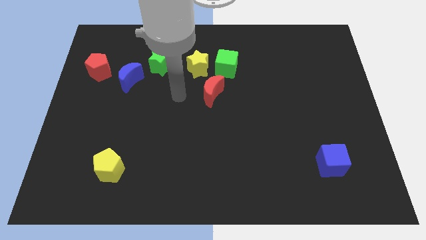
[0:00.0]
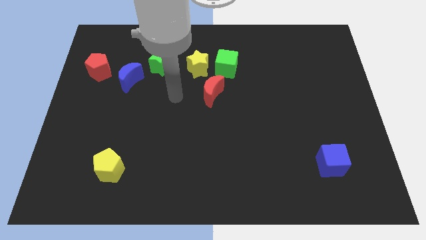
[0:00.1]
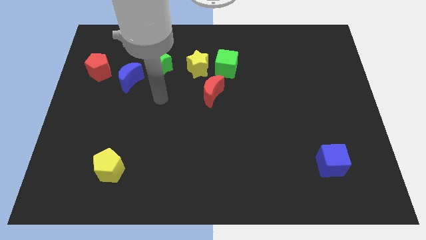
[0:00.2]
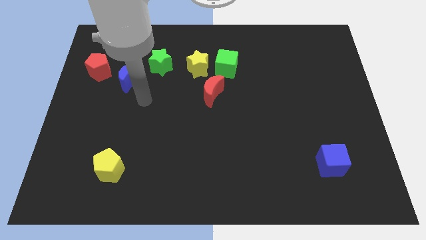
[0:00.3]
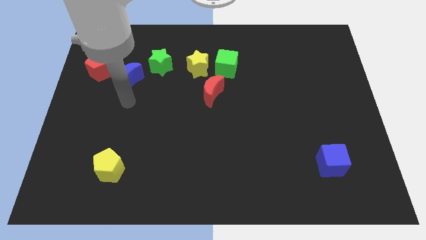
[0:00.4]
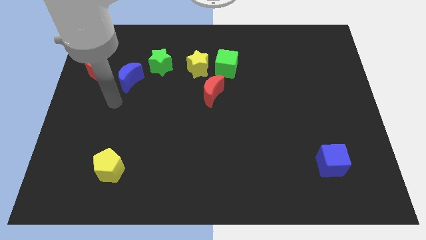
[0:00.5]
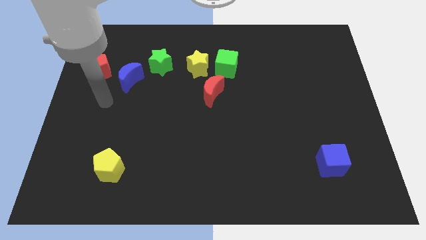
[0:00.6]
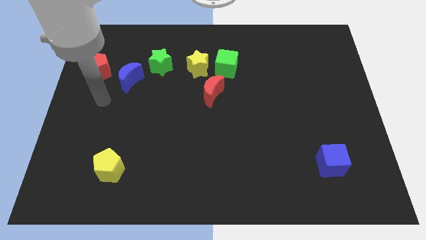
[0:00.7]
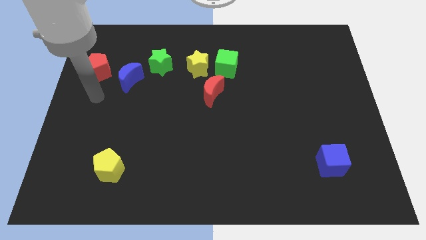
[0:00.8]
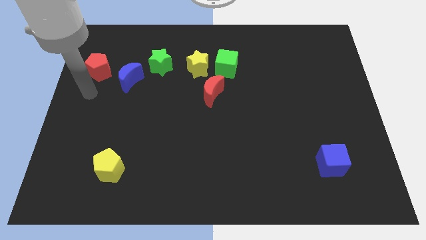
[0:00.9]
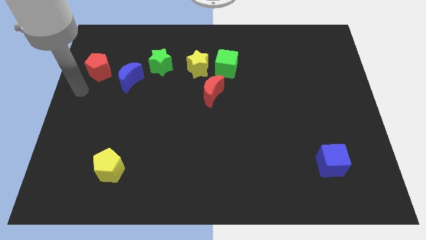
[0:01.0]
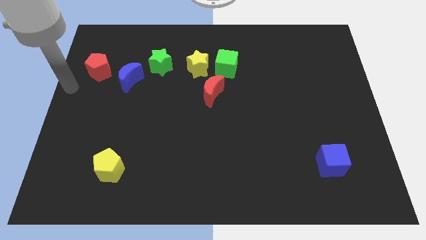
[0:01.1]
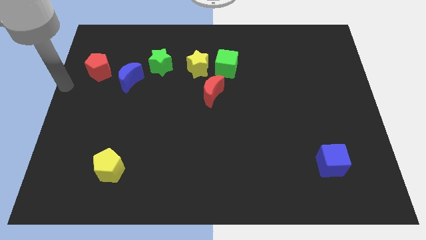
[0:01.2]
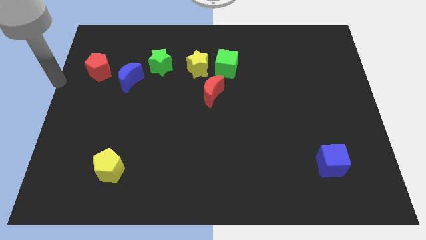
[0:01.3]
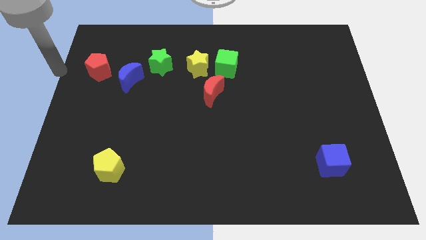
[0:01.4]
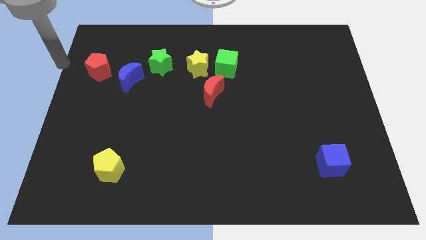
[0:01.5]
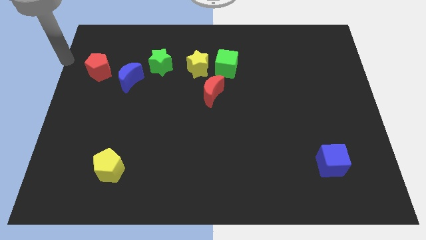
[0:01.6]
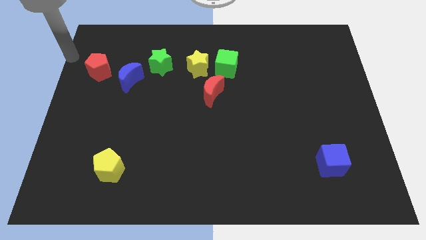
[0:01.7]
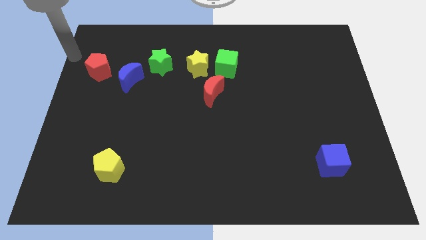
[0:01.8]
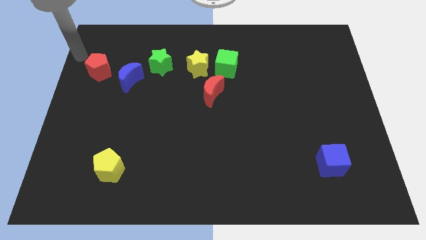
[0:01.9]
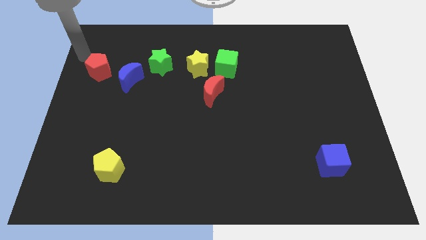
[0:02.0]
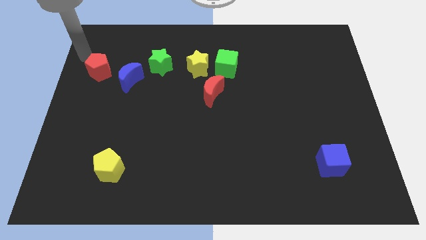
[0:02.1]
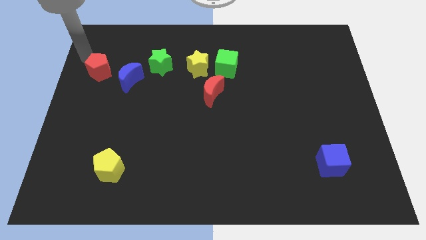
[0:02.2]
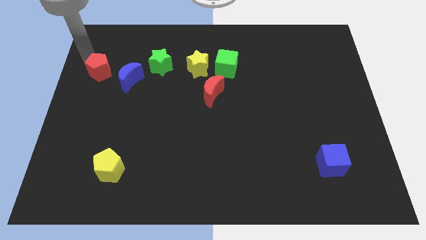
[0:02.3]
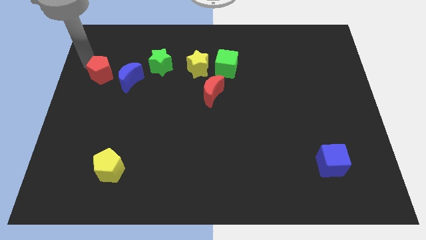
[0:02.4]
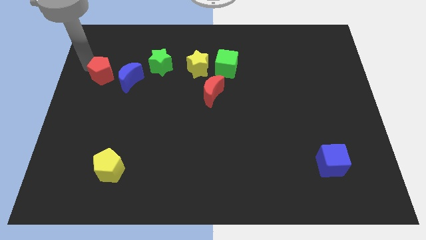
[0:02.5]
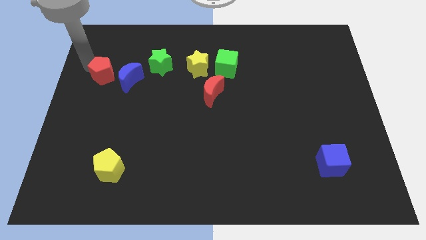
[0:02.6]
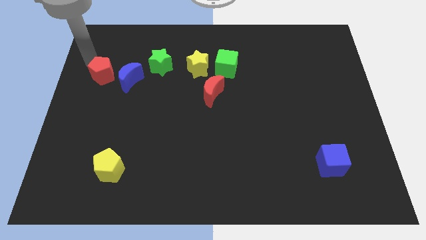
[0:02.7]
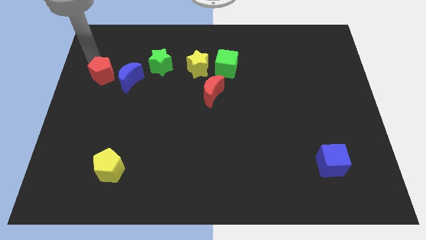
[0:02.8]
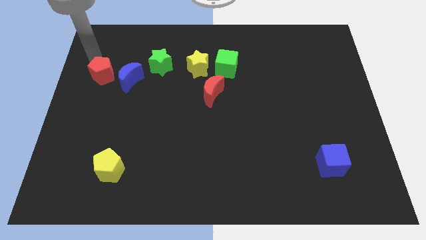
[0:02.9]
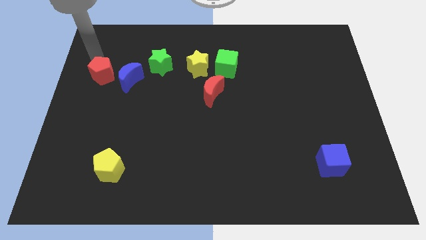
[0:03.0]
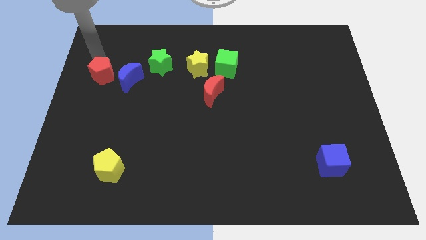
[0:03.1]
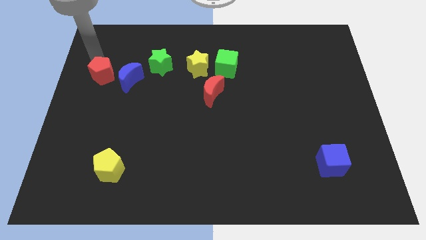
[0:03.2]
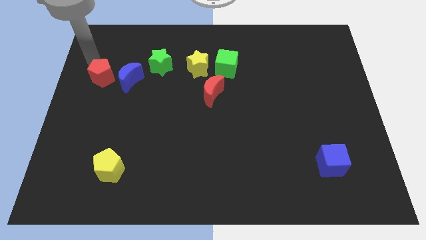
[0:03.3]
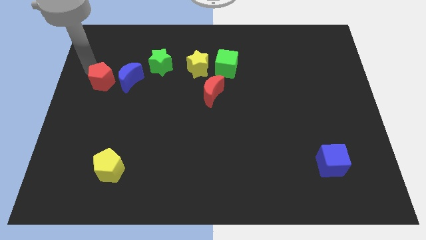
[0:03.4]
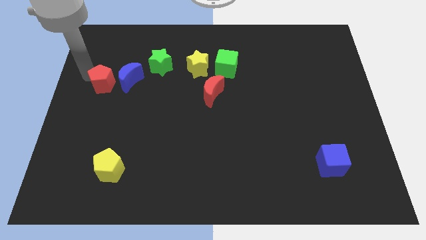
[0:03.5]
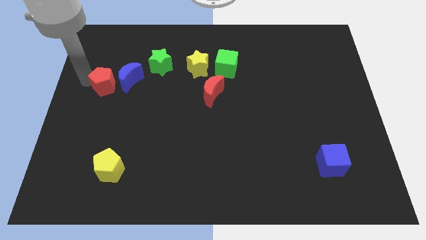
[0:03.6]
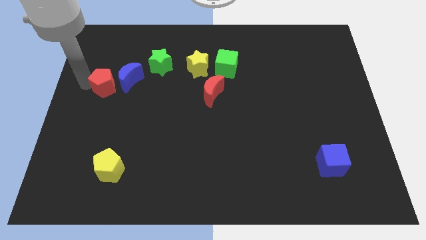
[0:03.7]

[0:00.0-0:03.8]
push the red pentagon towards the blue crescent

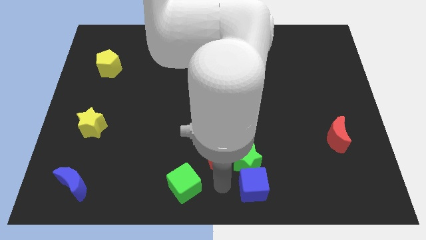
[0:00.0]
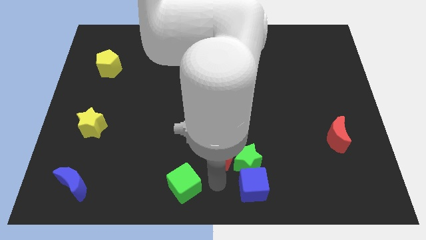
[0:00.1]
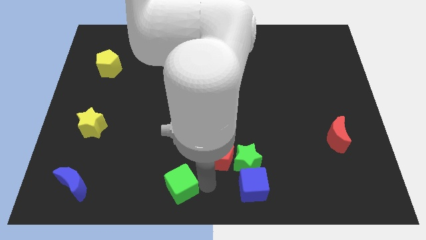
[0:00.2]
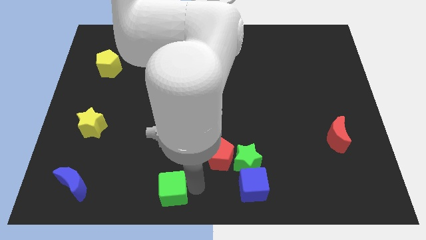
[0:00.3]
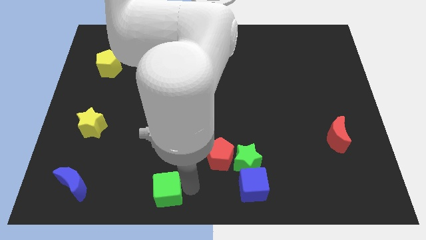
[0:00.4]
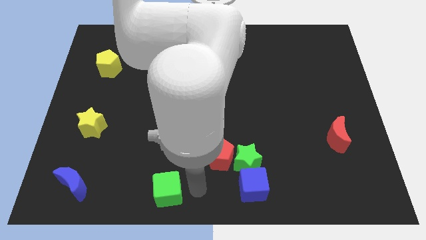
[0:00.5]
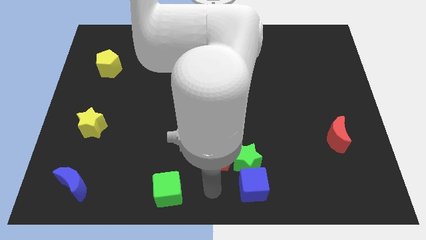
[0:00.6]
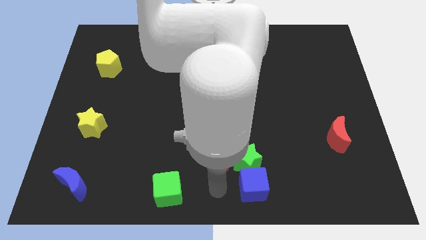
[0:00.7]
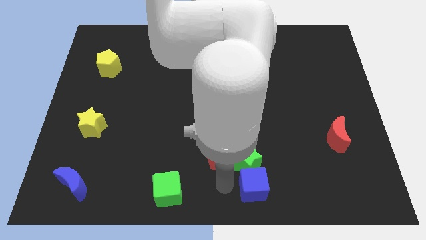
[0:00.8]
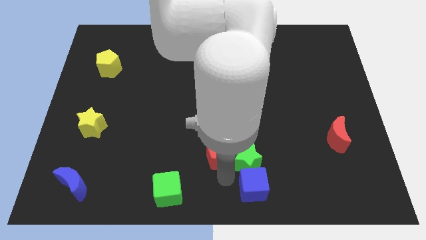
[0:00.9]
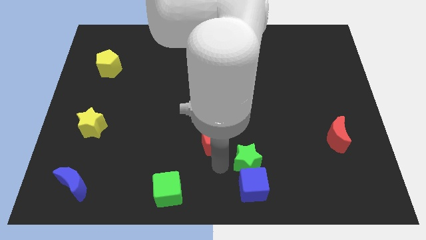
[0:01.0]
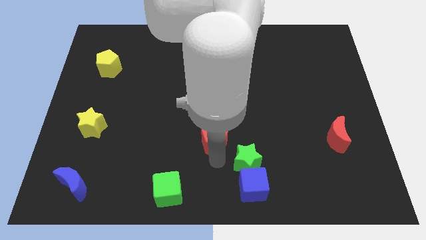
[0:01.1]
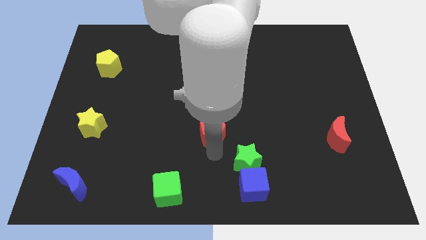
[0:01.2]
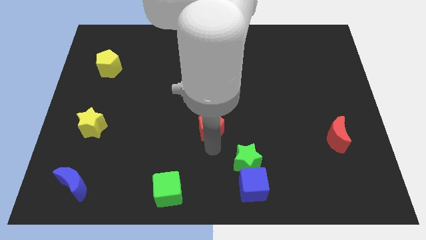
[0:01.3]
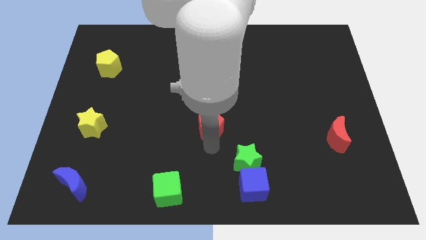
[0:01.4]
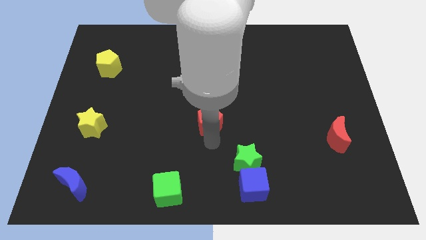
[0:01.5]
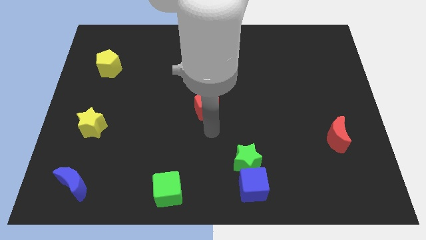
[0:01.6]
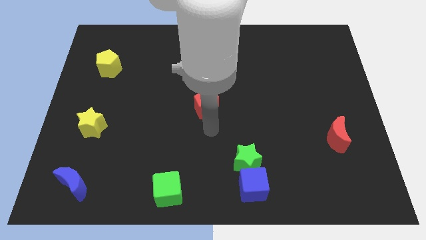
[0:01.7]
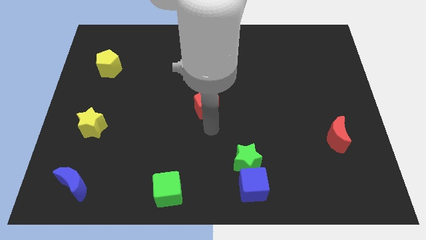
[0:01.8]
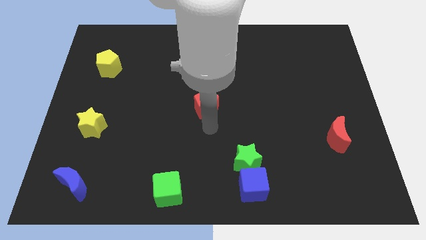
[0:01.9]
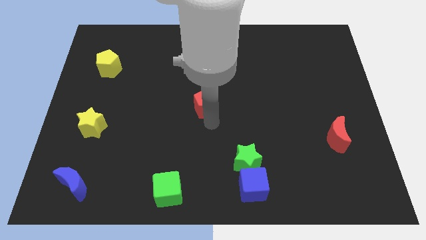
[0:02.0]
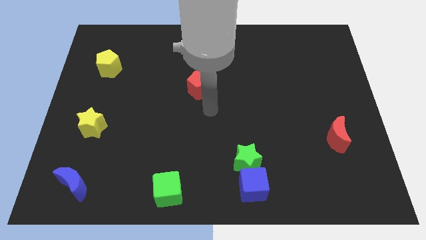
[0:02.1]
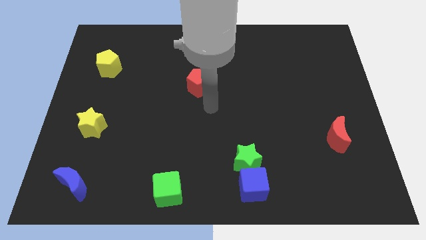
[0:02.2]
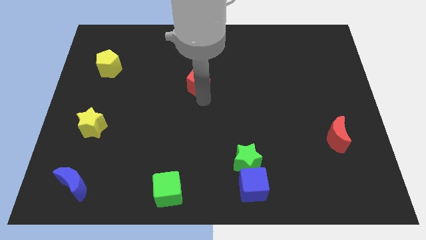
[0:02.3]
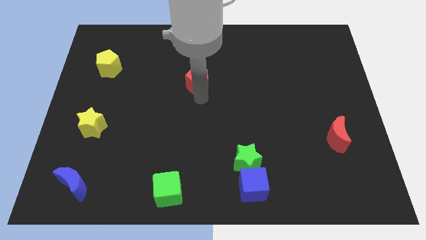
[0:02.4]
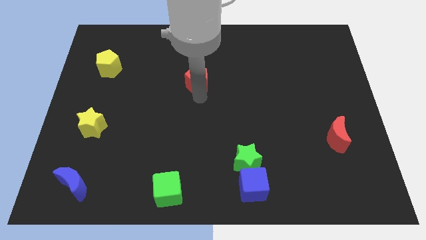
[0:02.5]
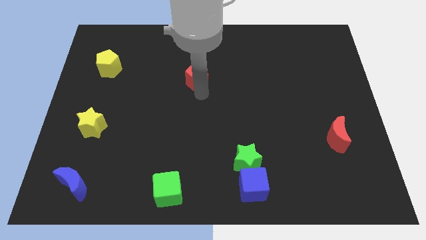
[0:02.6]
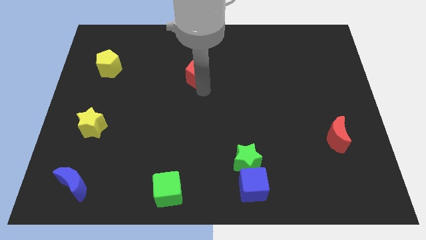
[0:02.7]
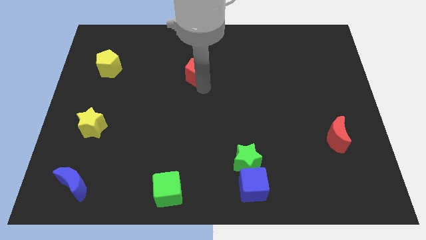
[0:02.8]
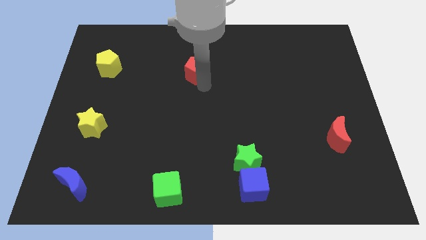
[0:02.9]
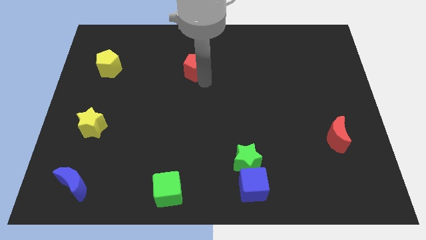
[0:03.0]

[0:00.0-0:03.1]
place red pentagon parallel to yellow pentagon

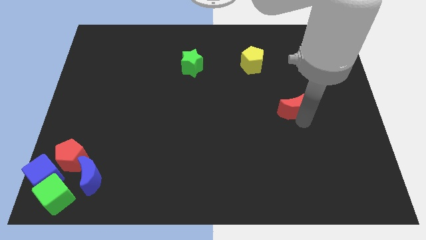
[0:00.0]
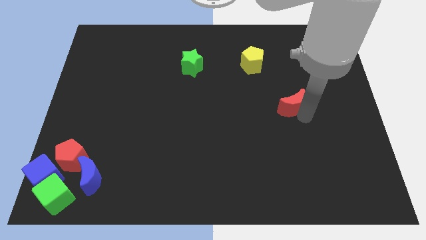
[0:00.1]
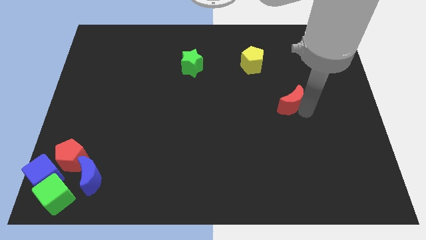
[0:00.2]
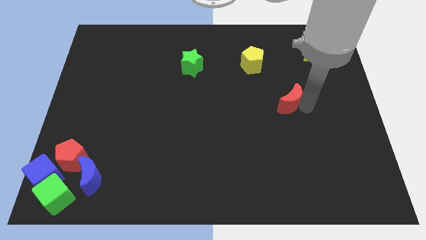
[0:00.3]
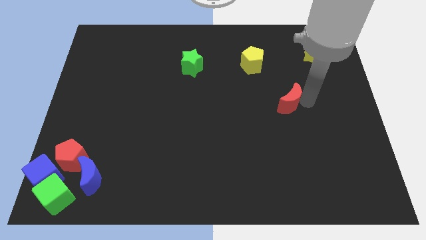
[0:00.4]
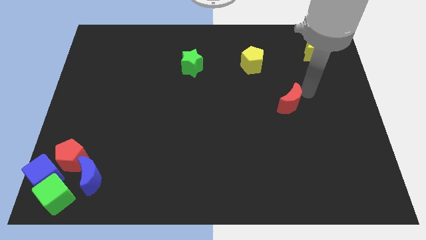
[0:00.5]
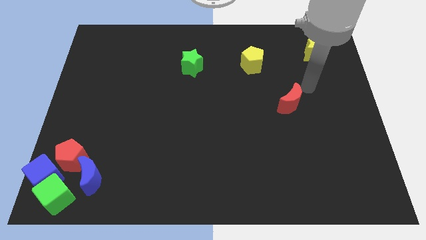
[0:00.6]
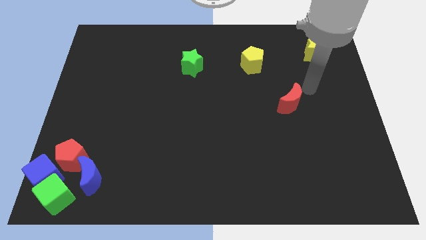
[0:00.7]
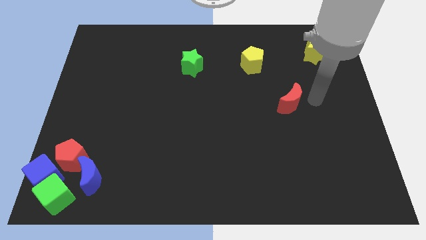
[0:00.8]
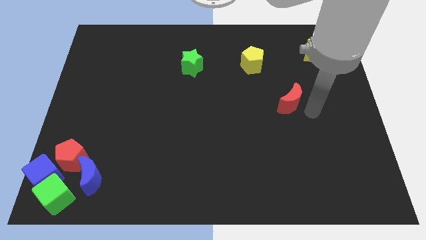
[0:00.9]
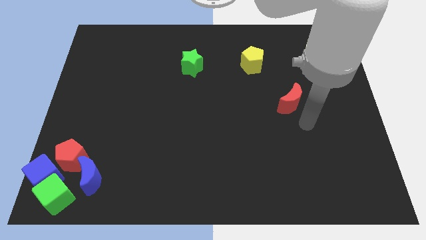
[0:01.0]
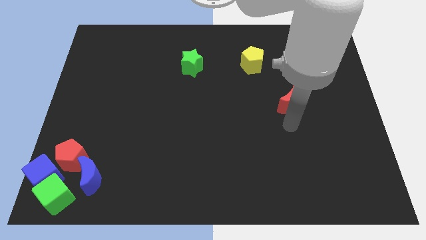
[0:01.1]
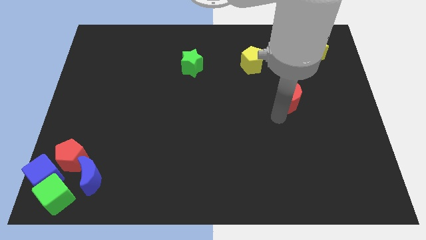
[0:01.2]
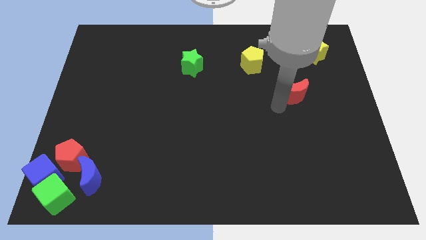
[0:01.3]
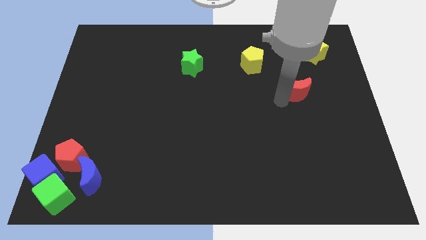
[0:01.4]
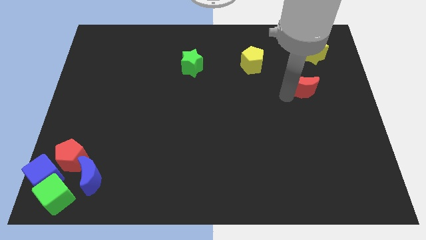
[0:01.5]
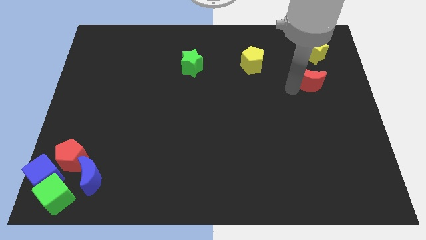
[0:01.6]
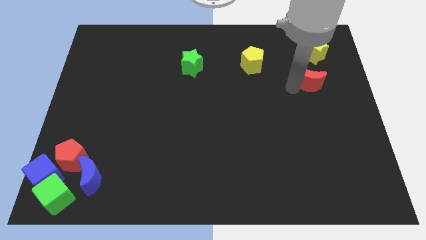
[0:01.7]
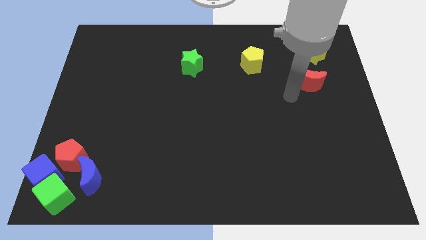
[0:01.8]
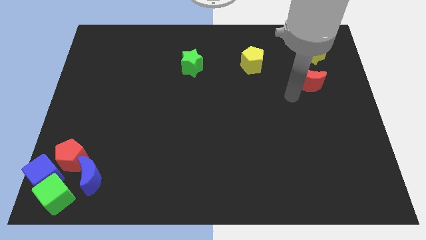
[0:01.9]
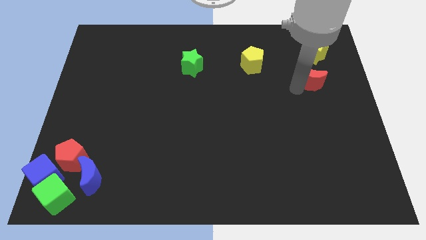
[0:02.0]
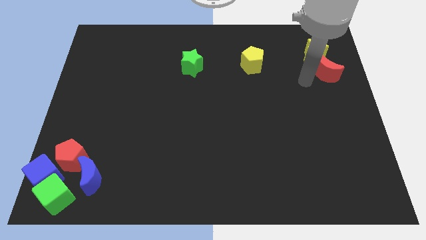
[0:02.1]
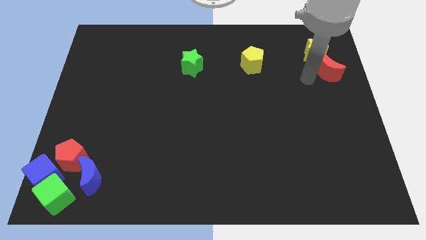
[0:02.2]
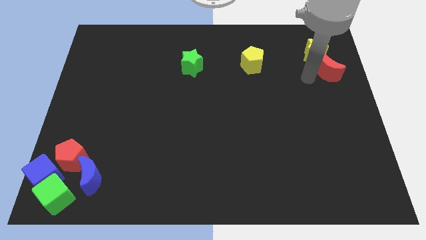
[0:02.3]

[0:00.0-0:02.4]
push the red crescent to the bottom side of yellow star
